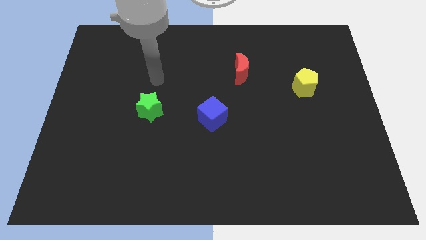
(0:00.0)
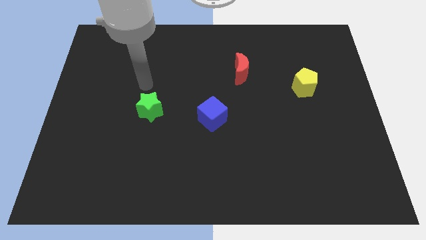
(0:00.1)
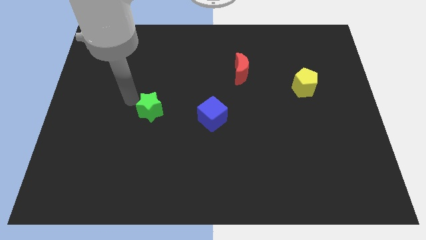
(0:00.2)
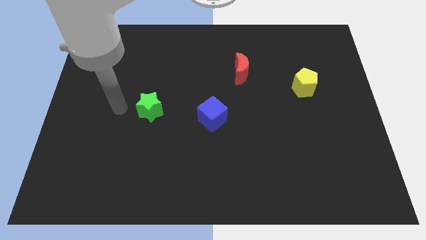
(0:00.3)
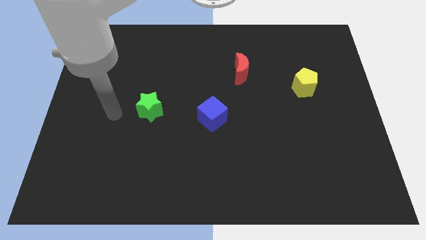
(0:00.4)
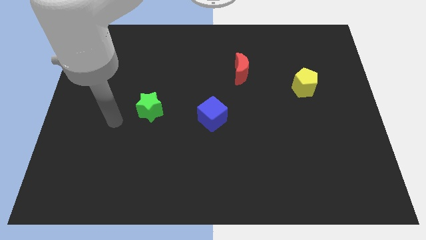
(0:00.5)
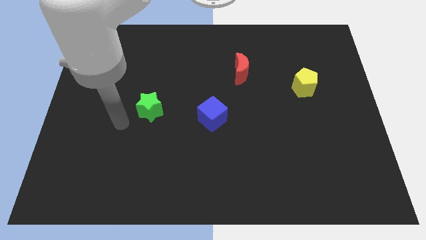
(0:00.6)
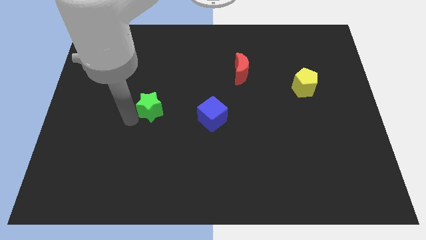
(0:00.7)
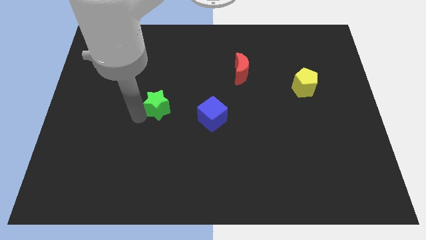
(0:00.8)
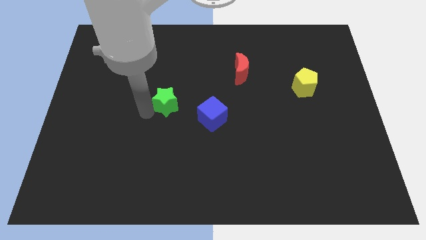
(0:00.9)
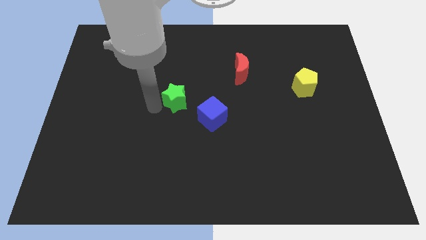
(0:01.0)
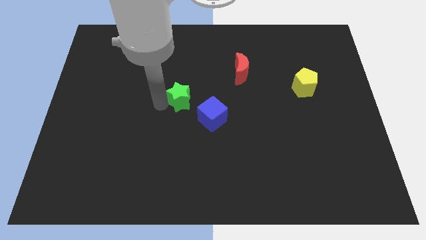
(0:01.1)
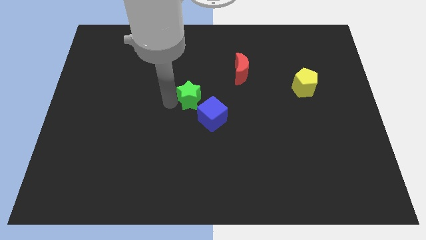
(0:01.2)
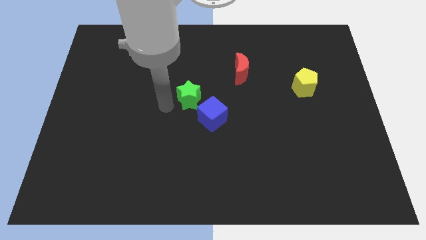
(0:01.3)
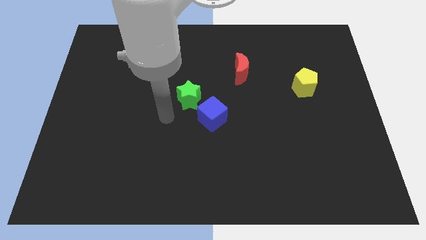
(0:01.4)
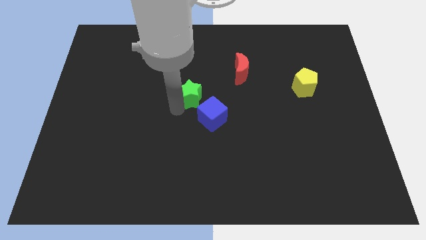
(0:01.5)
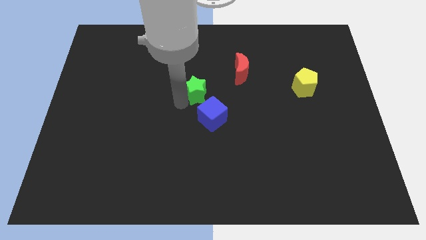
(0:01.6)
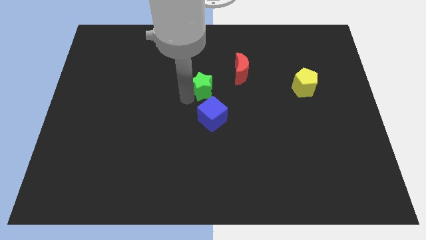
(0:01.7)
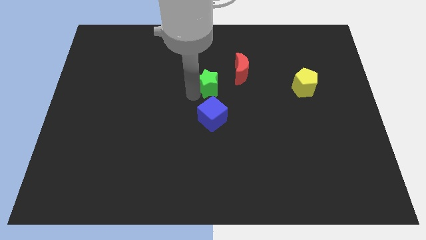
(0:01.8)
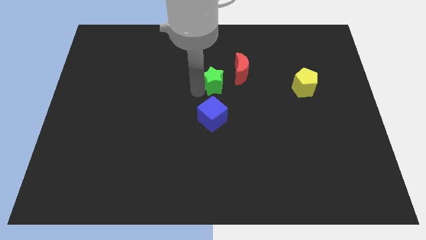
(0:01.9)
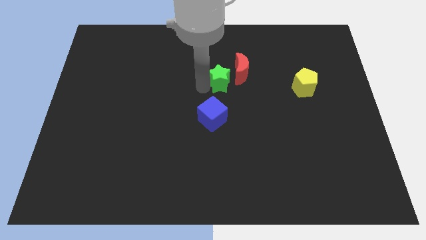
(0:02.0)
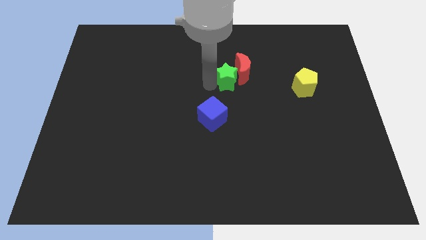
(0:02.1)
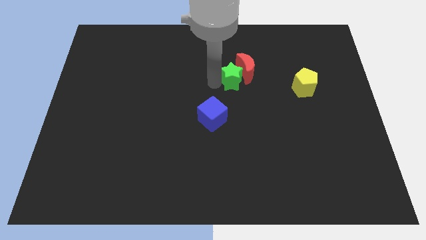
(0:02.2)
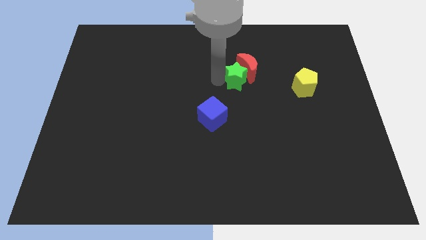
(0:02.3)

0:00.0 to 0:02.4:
put the green star close to the red block

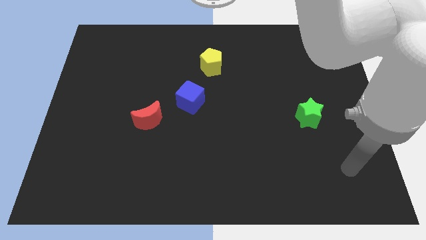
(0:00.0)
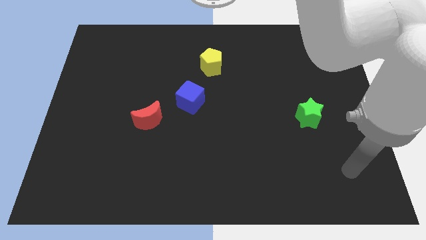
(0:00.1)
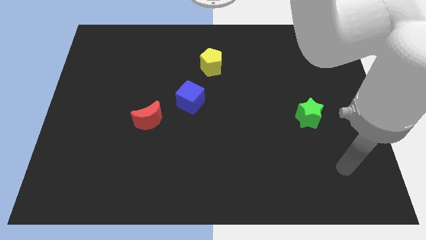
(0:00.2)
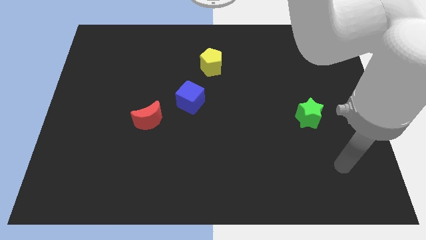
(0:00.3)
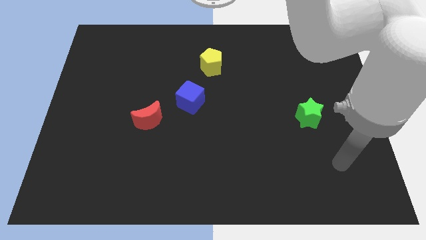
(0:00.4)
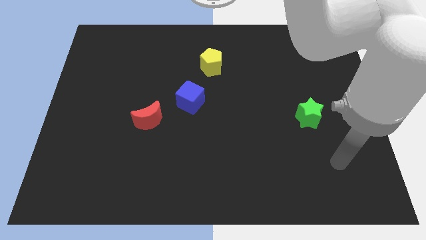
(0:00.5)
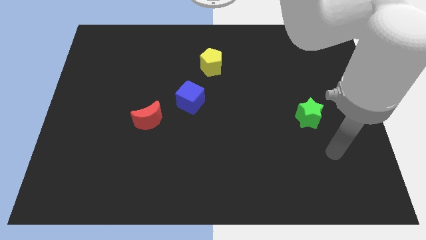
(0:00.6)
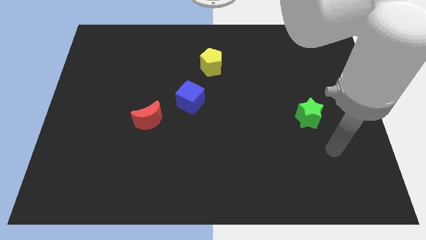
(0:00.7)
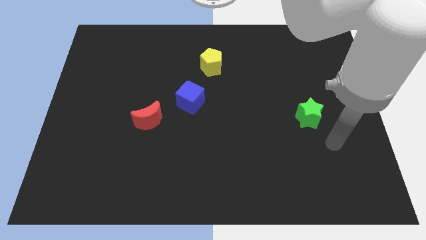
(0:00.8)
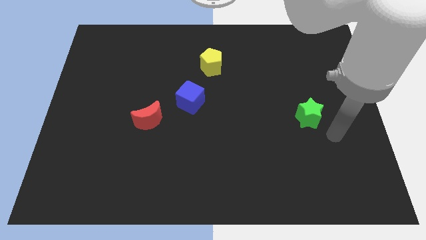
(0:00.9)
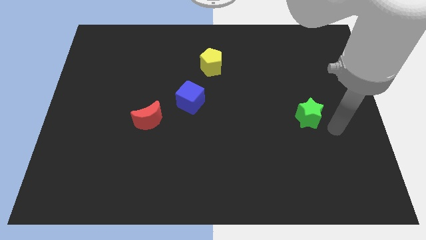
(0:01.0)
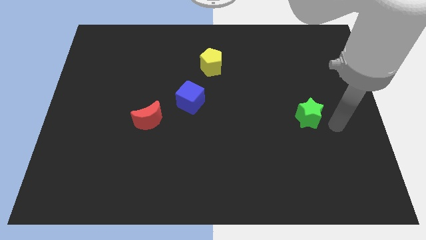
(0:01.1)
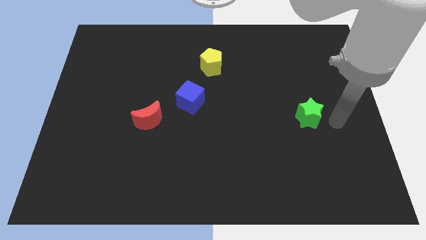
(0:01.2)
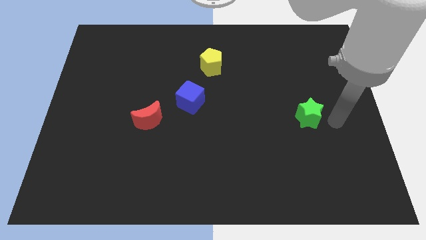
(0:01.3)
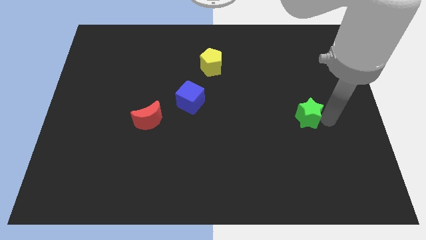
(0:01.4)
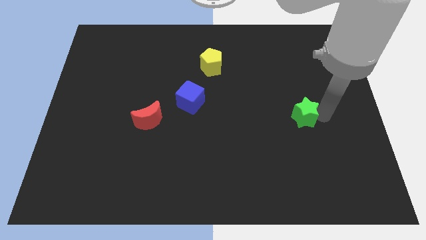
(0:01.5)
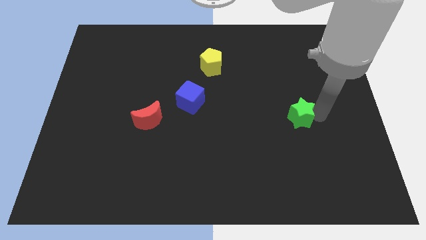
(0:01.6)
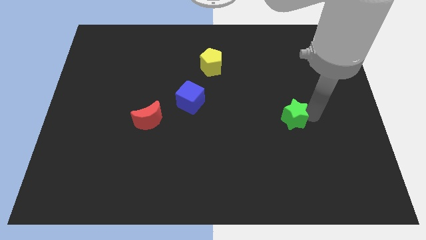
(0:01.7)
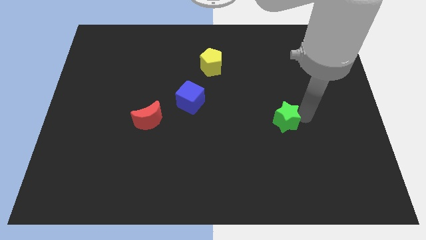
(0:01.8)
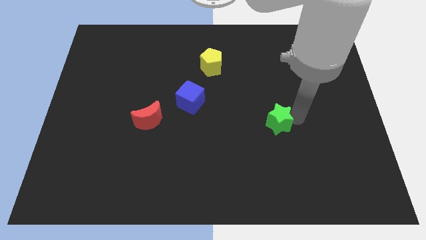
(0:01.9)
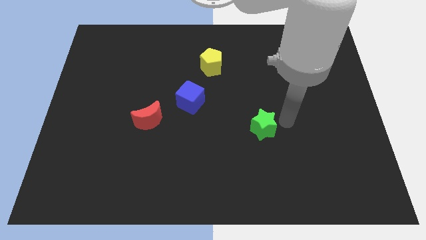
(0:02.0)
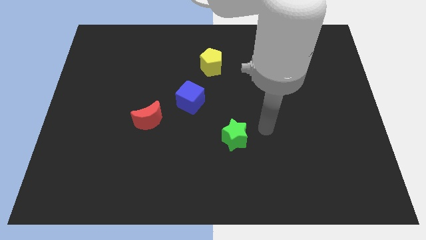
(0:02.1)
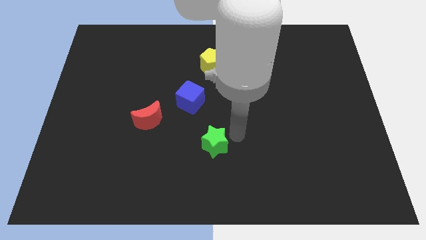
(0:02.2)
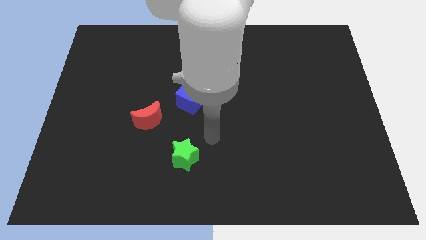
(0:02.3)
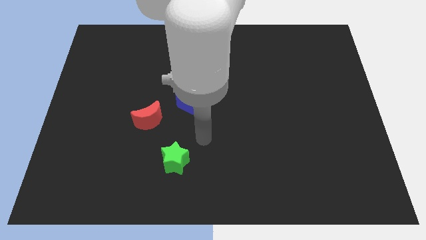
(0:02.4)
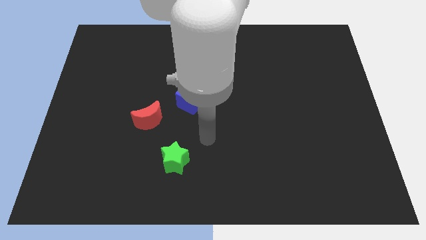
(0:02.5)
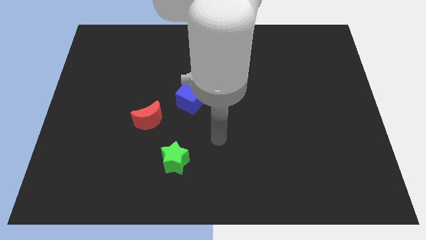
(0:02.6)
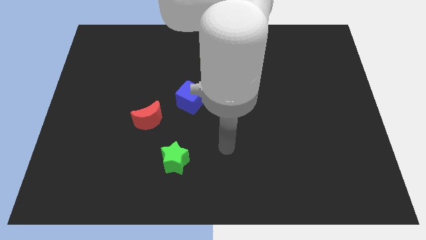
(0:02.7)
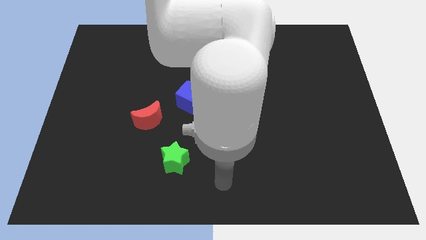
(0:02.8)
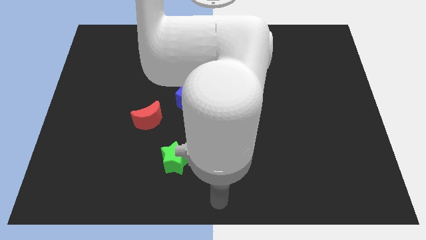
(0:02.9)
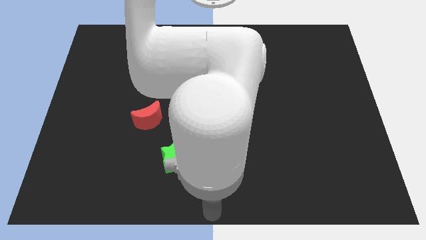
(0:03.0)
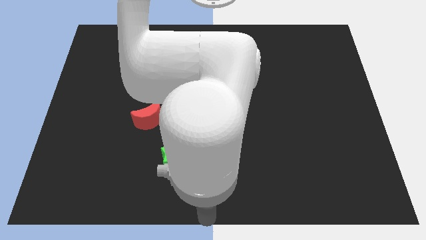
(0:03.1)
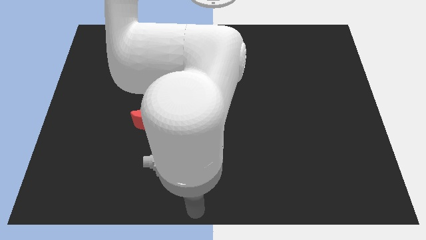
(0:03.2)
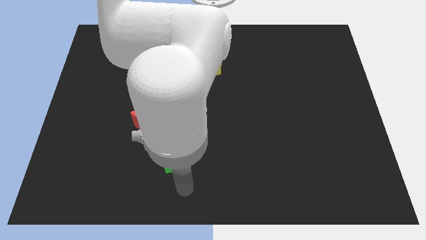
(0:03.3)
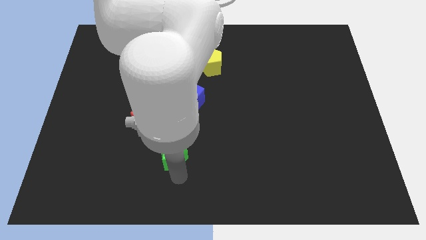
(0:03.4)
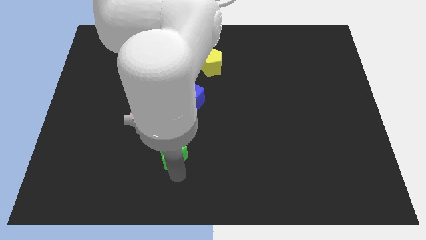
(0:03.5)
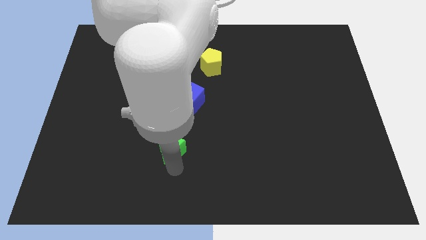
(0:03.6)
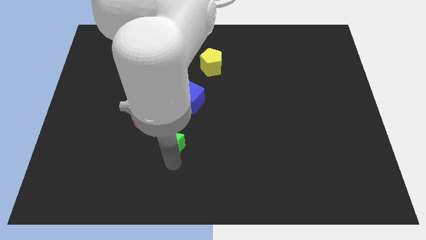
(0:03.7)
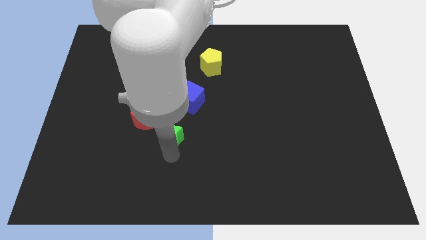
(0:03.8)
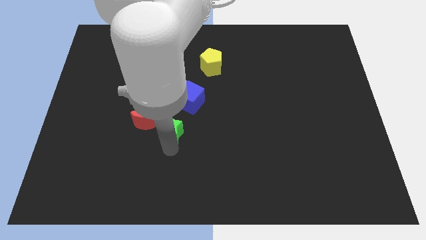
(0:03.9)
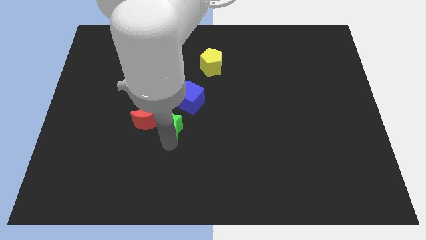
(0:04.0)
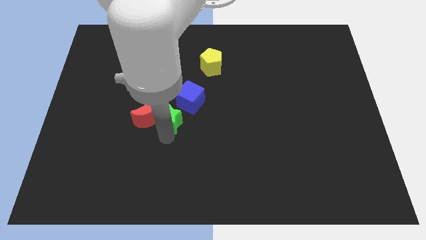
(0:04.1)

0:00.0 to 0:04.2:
move the green block close to the moon

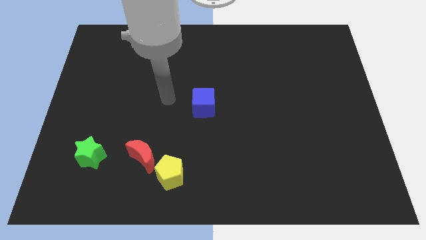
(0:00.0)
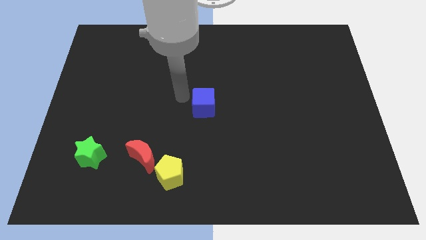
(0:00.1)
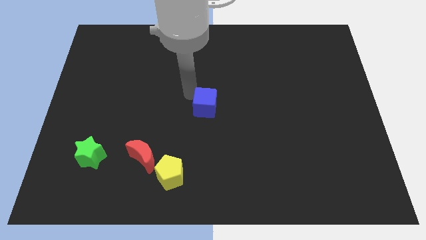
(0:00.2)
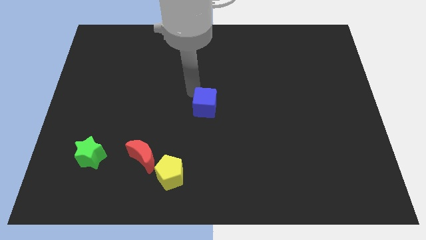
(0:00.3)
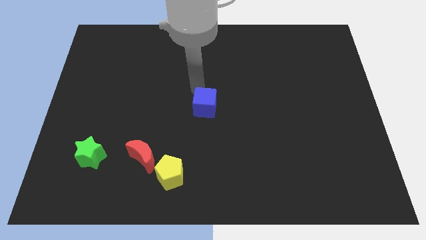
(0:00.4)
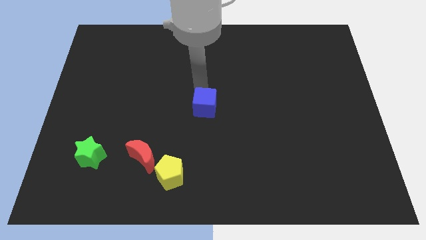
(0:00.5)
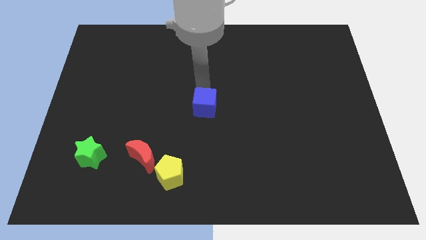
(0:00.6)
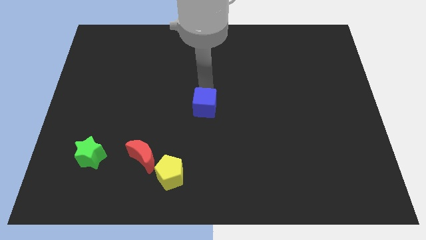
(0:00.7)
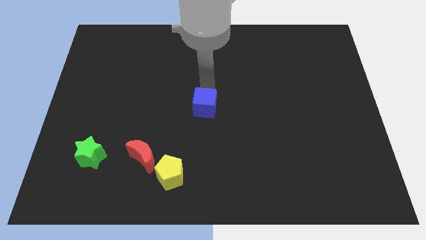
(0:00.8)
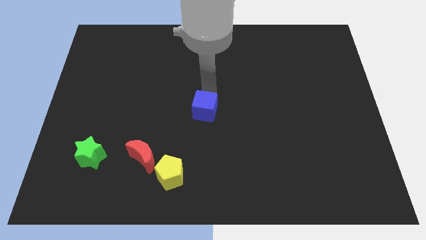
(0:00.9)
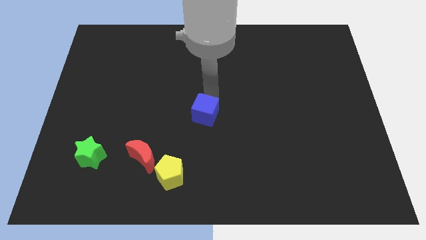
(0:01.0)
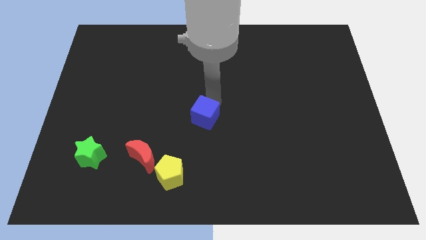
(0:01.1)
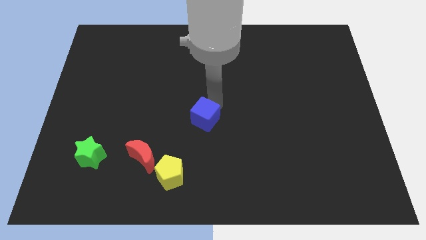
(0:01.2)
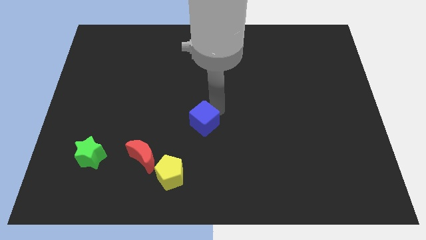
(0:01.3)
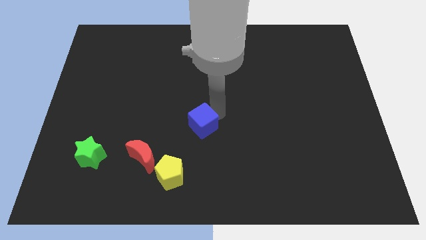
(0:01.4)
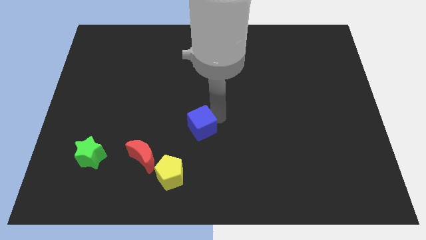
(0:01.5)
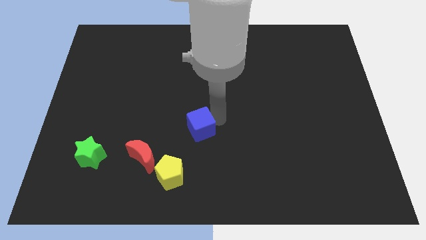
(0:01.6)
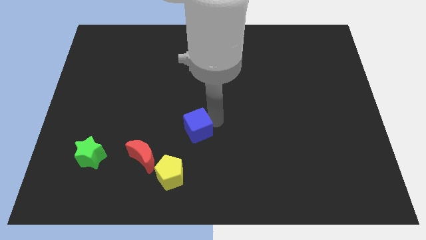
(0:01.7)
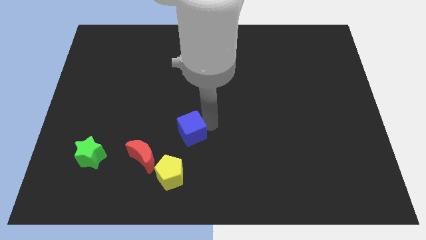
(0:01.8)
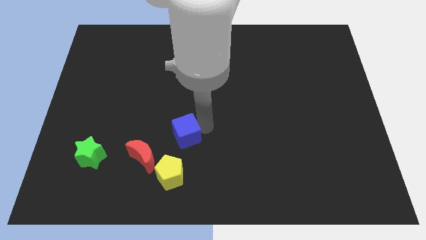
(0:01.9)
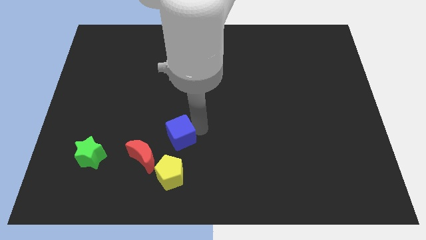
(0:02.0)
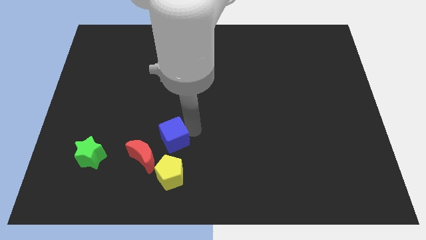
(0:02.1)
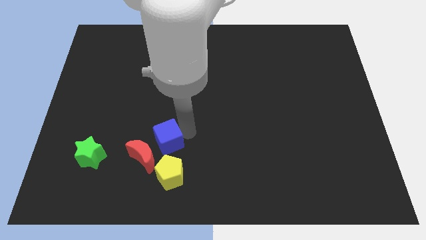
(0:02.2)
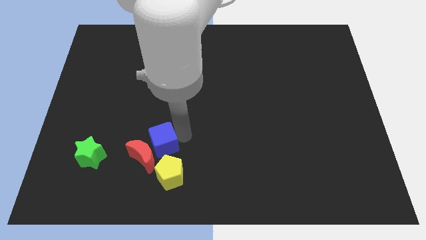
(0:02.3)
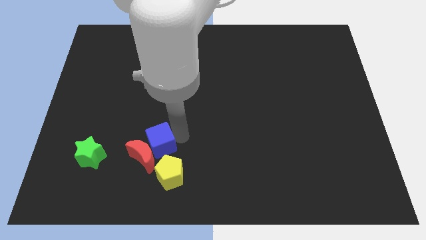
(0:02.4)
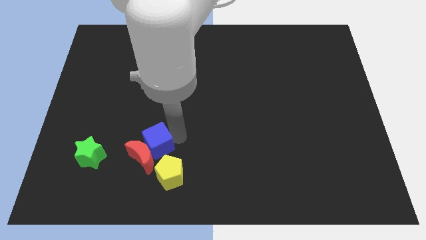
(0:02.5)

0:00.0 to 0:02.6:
put the cube towards the moon
